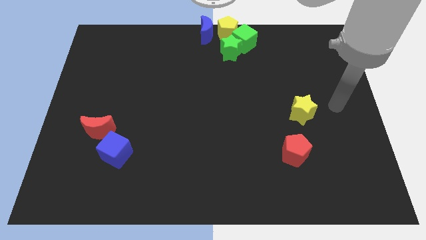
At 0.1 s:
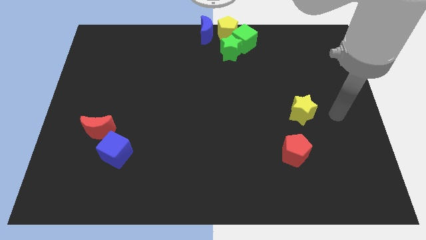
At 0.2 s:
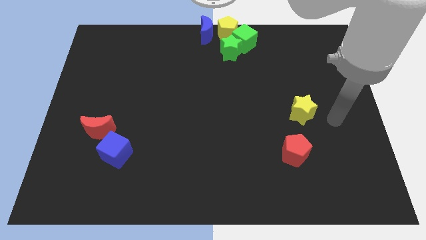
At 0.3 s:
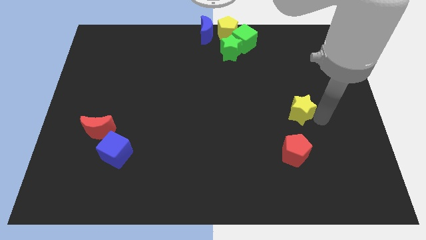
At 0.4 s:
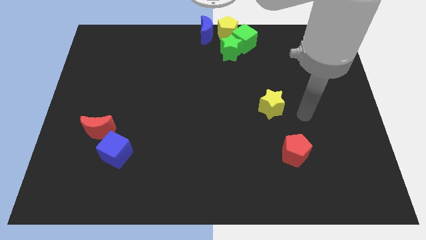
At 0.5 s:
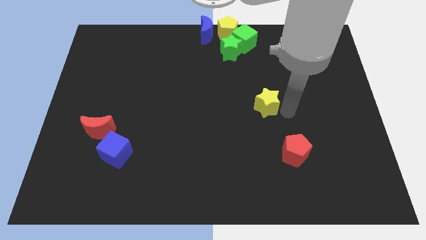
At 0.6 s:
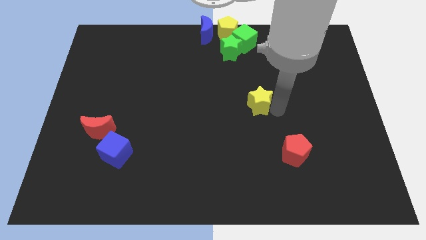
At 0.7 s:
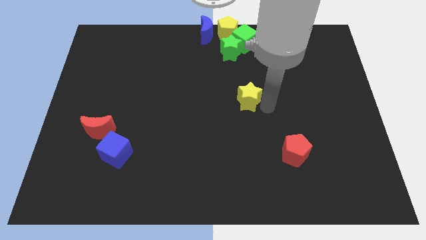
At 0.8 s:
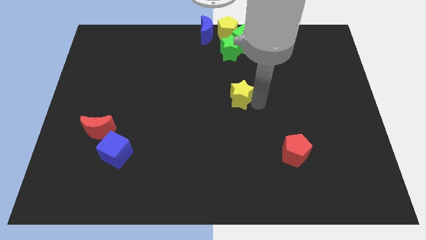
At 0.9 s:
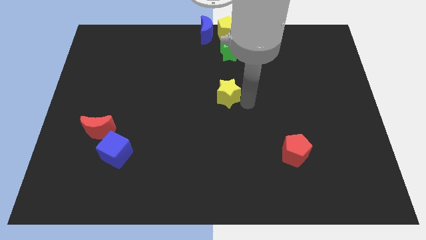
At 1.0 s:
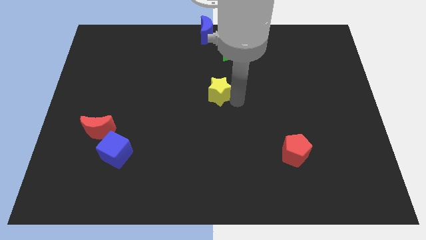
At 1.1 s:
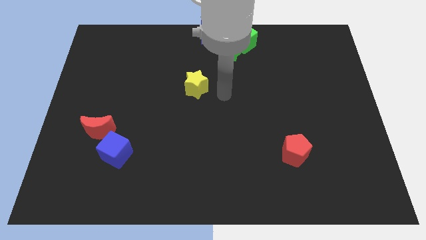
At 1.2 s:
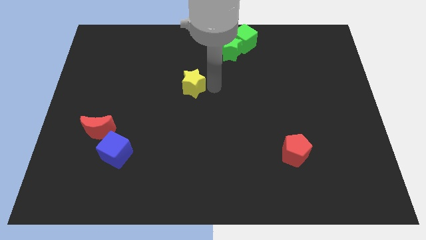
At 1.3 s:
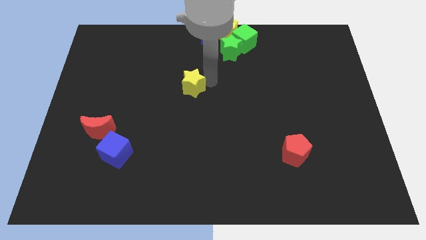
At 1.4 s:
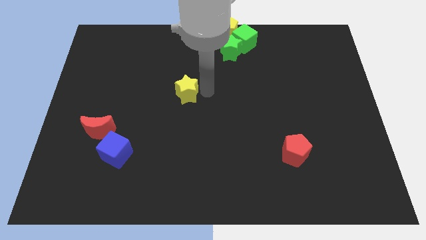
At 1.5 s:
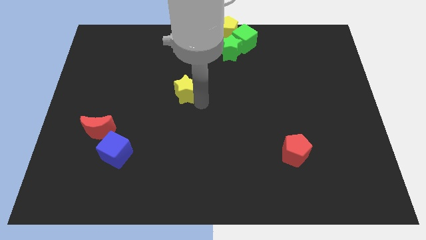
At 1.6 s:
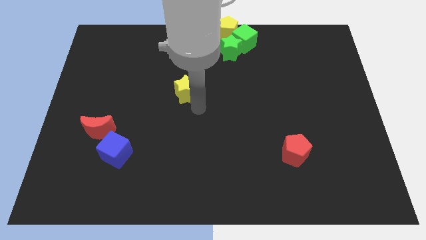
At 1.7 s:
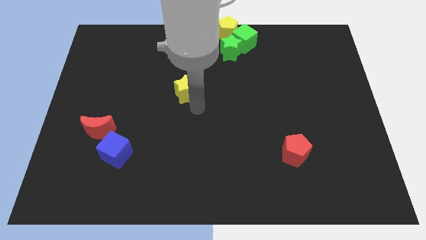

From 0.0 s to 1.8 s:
move the yellow star diagonally to the green star

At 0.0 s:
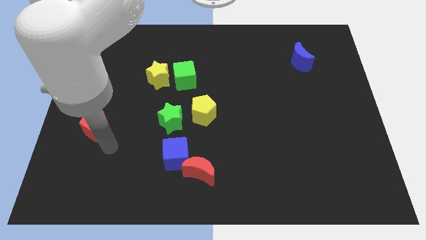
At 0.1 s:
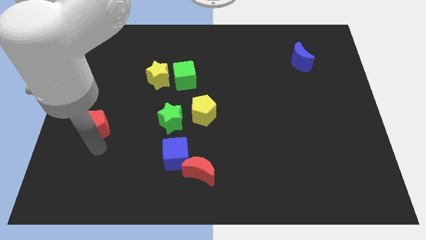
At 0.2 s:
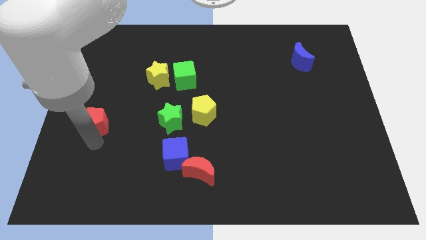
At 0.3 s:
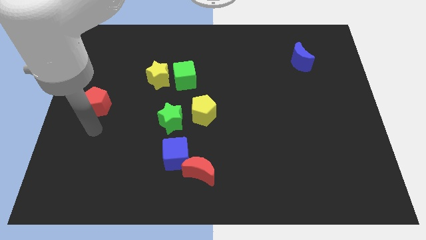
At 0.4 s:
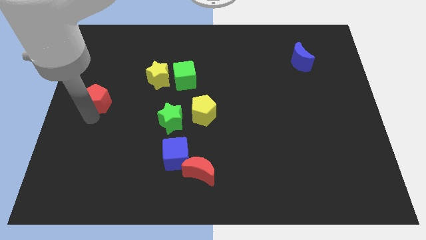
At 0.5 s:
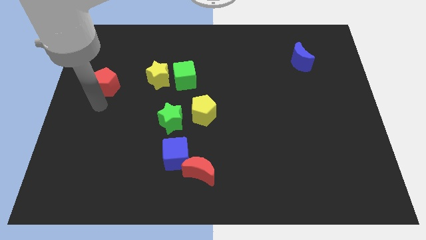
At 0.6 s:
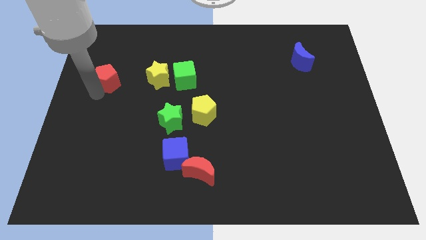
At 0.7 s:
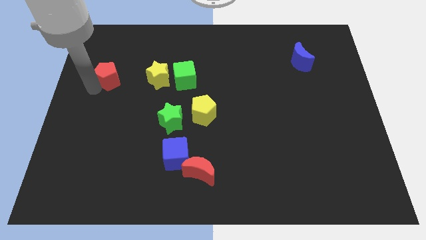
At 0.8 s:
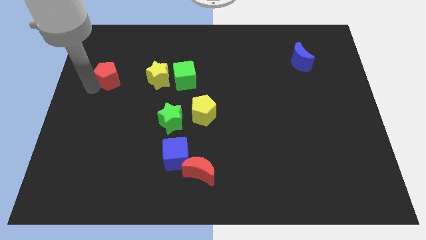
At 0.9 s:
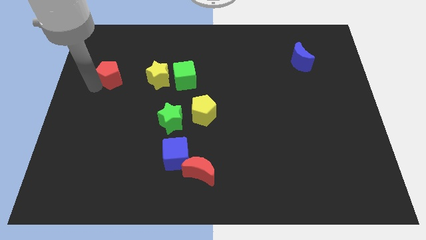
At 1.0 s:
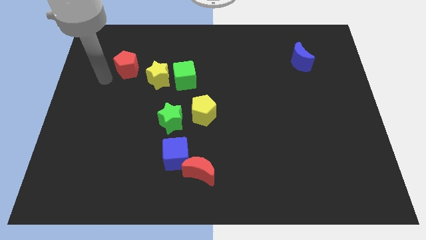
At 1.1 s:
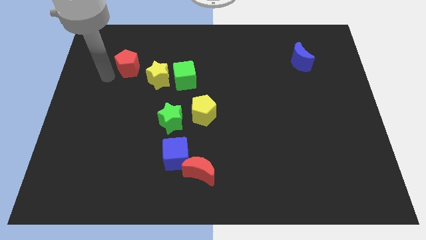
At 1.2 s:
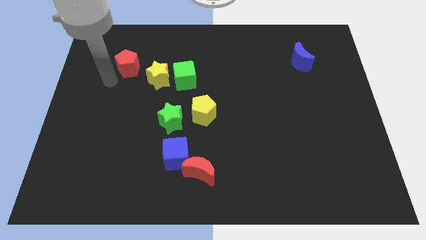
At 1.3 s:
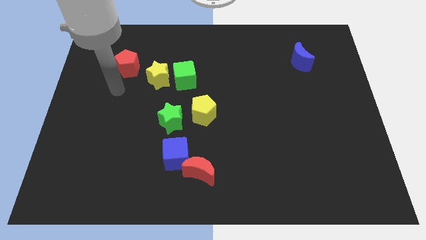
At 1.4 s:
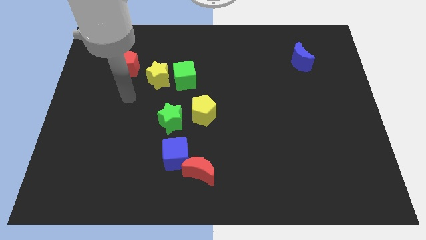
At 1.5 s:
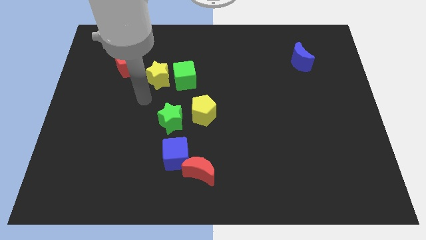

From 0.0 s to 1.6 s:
push the red pentagon to the top left of the yellow star

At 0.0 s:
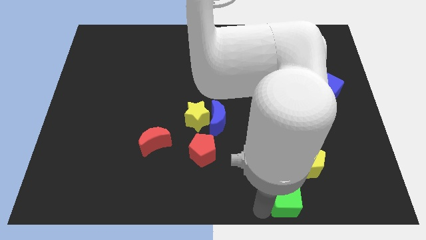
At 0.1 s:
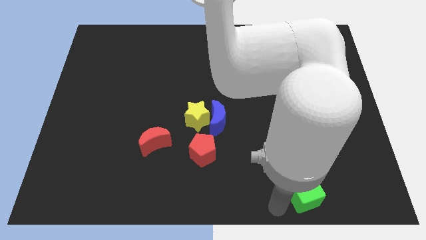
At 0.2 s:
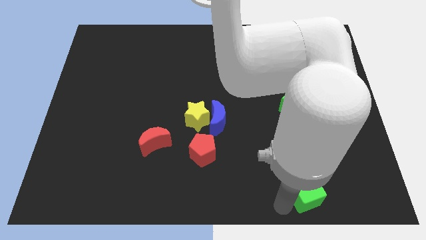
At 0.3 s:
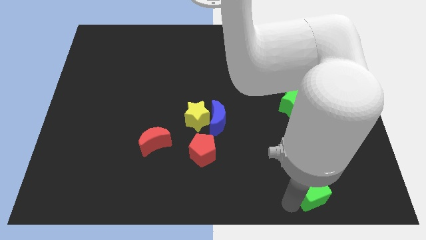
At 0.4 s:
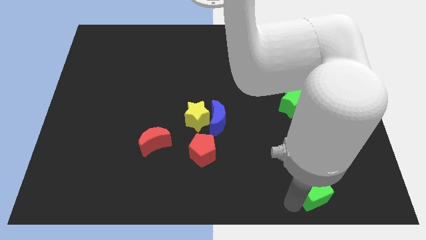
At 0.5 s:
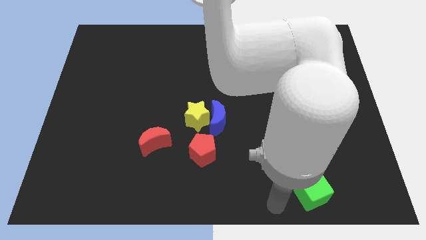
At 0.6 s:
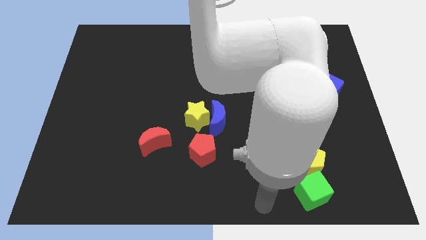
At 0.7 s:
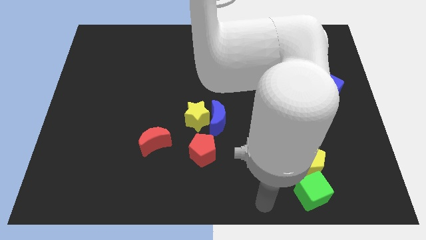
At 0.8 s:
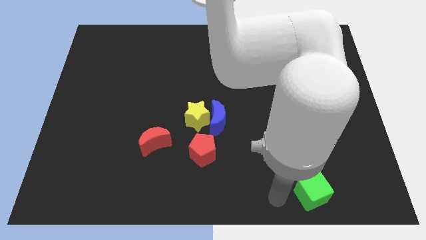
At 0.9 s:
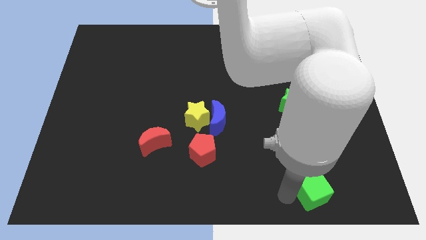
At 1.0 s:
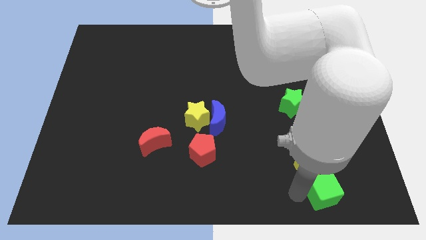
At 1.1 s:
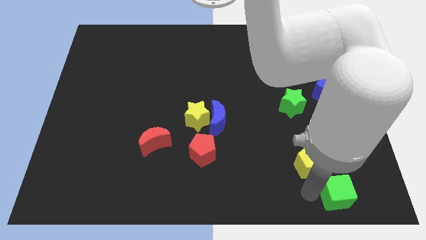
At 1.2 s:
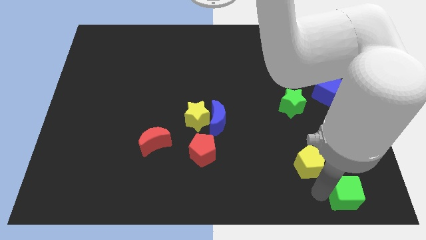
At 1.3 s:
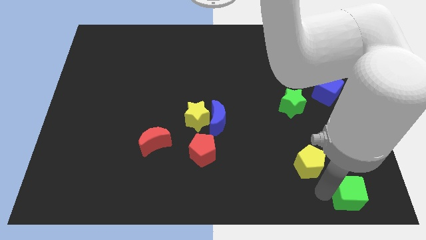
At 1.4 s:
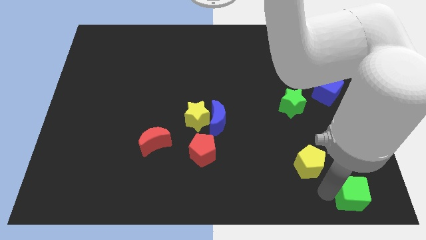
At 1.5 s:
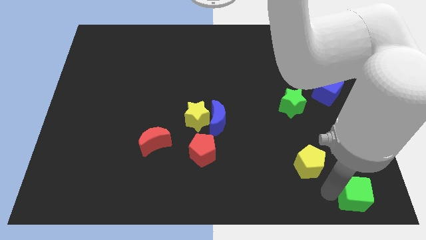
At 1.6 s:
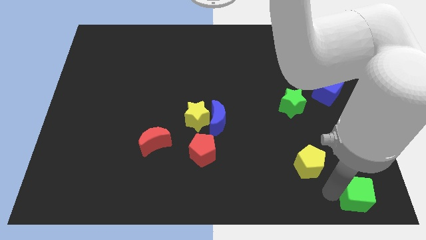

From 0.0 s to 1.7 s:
move the green cube to the right corner of the board

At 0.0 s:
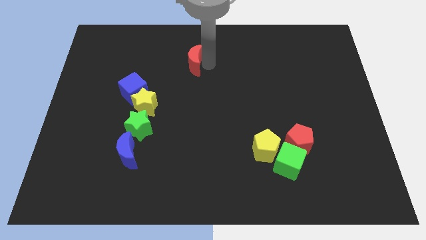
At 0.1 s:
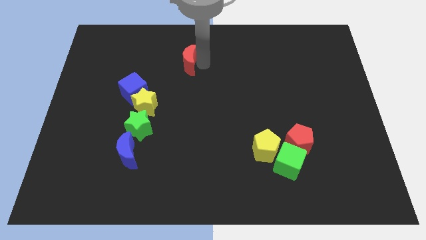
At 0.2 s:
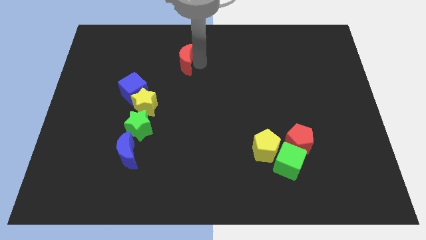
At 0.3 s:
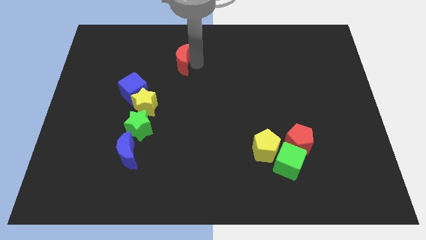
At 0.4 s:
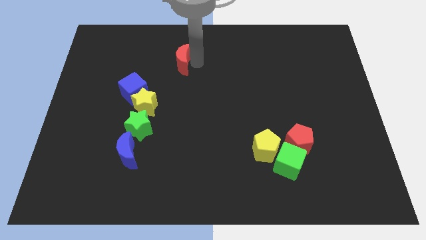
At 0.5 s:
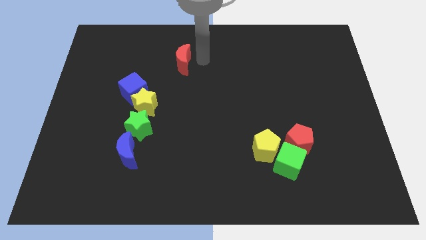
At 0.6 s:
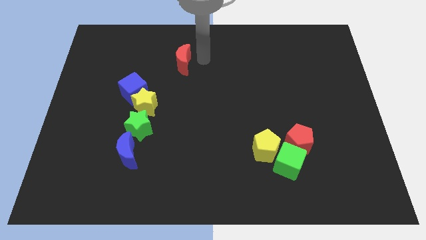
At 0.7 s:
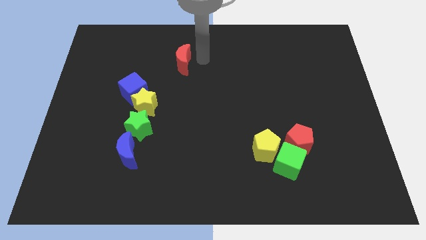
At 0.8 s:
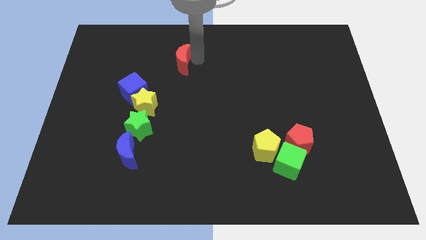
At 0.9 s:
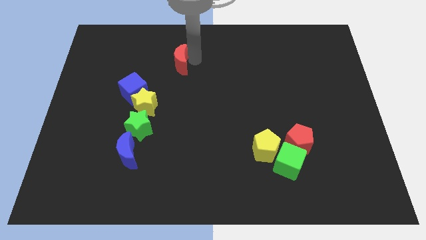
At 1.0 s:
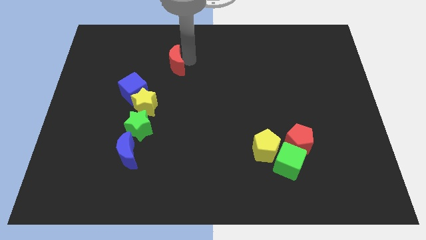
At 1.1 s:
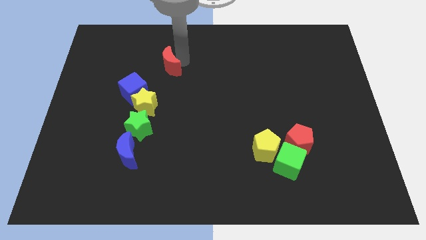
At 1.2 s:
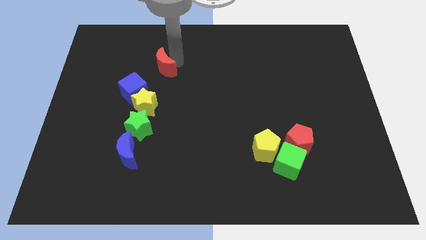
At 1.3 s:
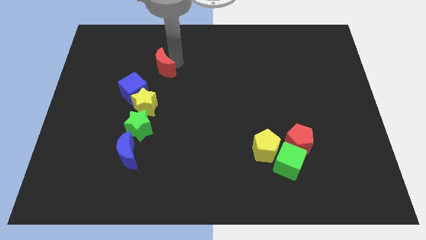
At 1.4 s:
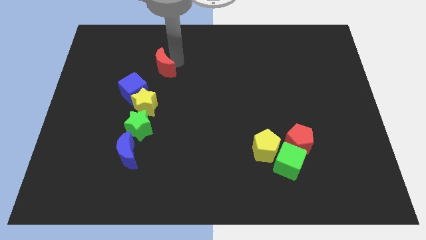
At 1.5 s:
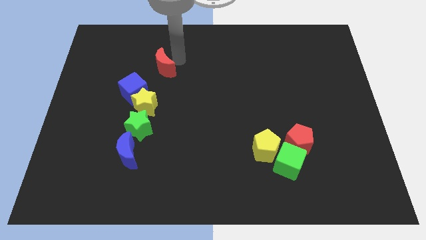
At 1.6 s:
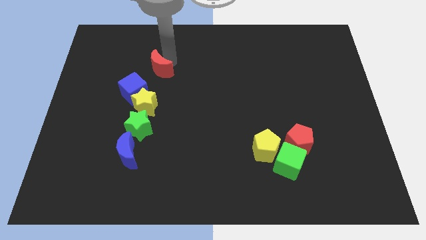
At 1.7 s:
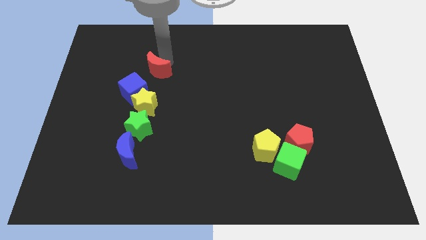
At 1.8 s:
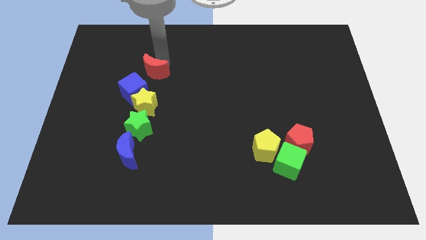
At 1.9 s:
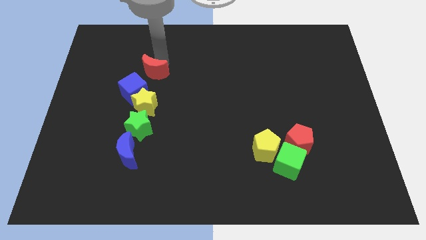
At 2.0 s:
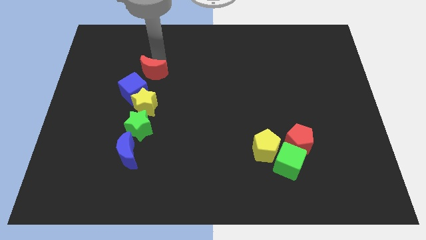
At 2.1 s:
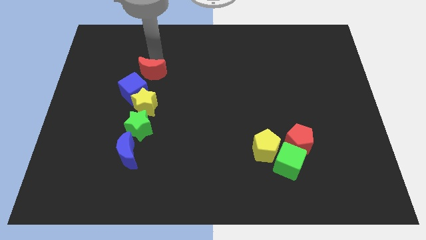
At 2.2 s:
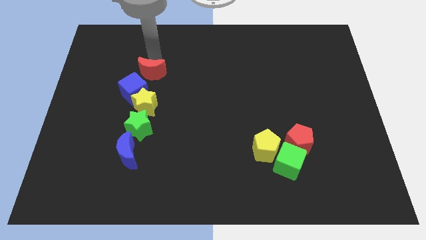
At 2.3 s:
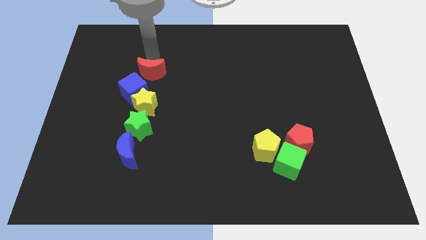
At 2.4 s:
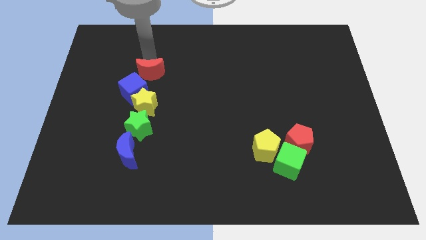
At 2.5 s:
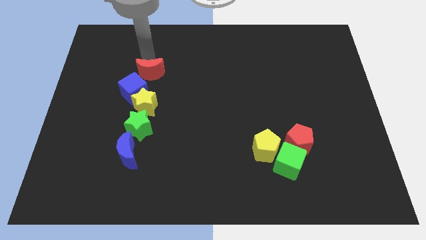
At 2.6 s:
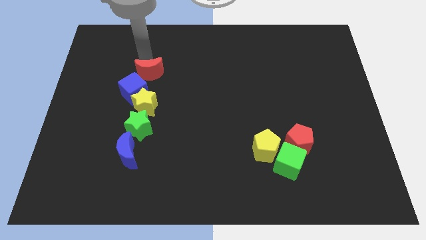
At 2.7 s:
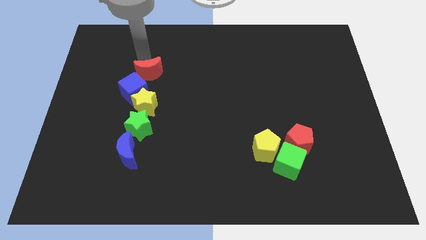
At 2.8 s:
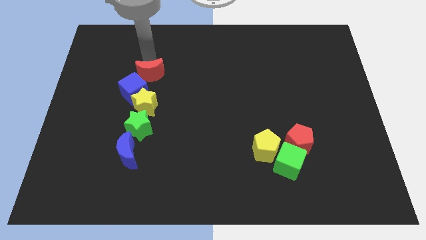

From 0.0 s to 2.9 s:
move the red moon close to the blue cube

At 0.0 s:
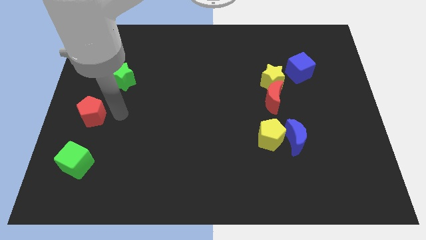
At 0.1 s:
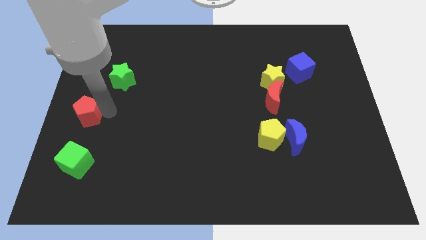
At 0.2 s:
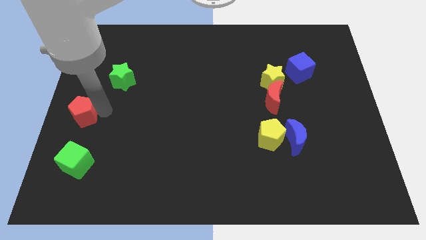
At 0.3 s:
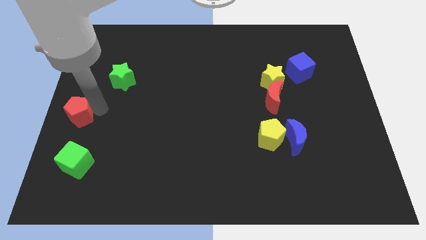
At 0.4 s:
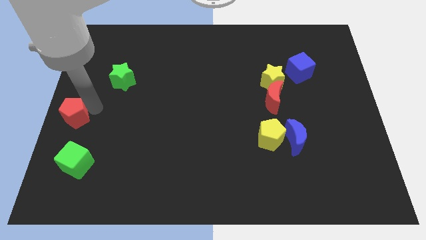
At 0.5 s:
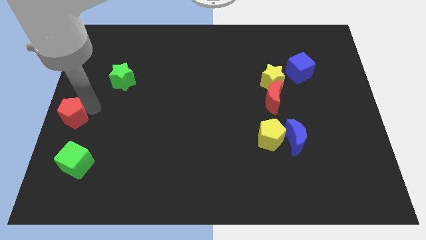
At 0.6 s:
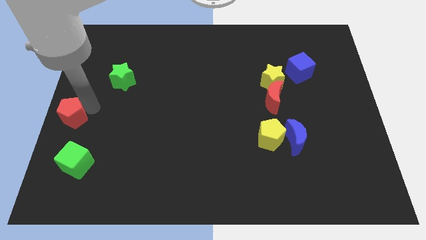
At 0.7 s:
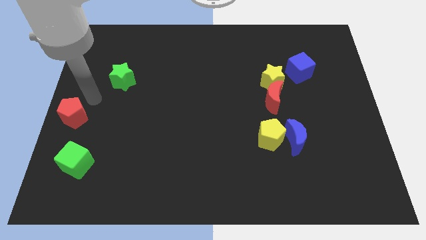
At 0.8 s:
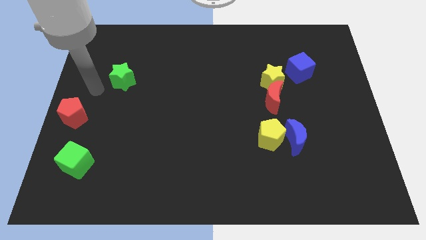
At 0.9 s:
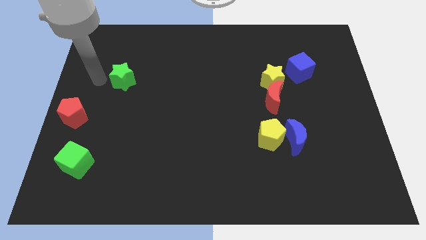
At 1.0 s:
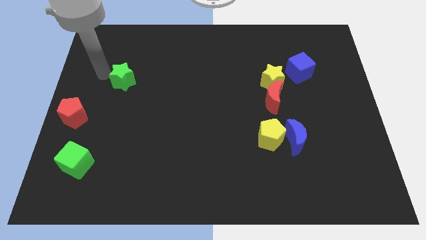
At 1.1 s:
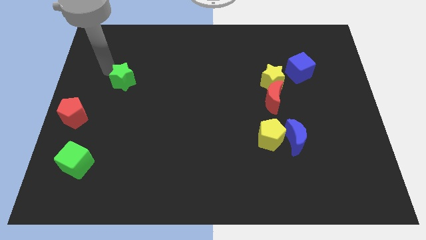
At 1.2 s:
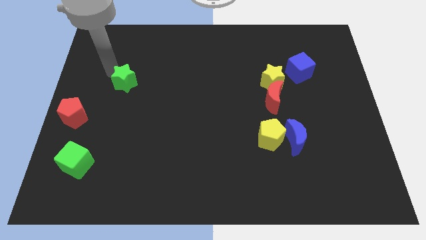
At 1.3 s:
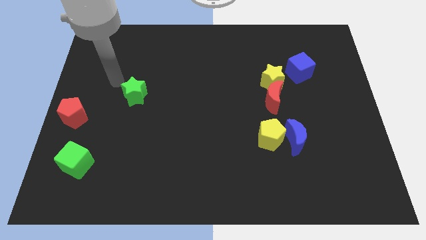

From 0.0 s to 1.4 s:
push the red pentagon away from the diagnoal line
